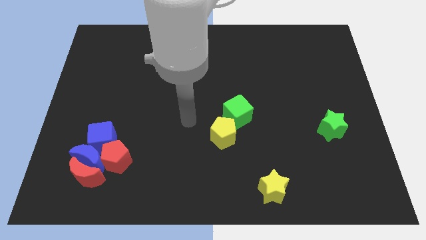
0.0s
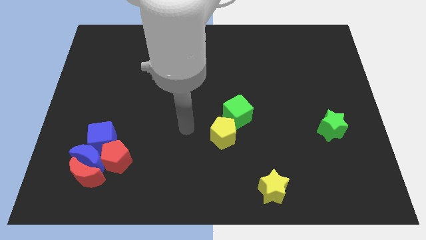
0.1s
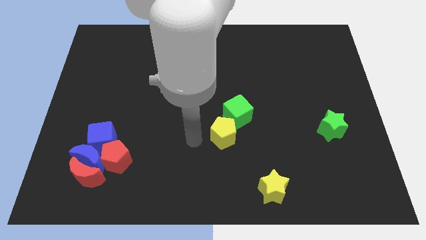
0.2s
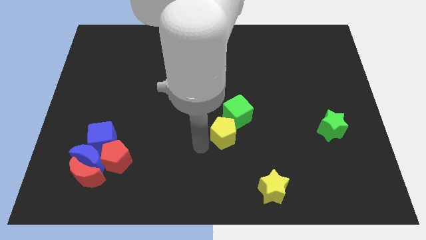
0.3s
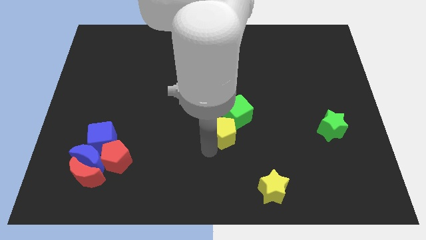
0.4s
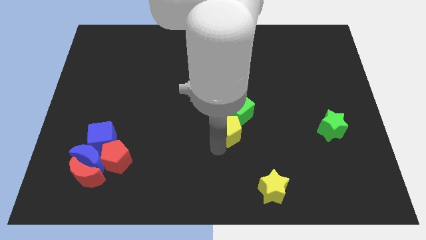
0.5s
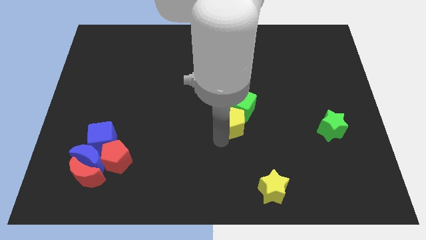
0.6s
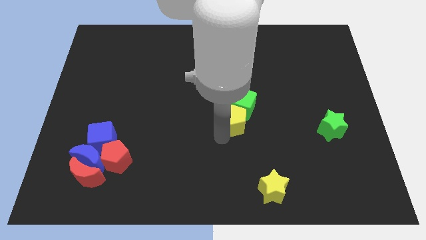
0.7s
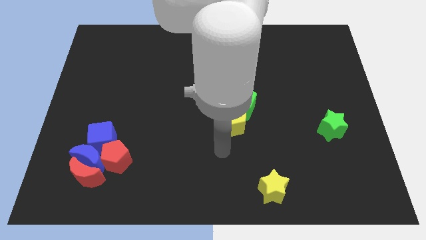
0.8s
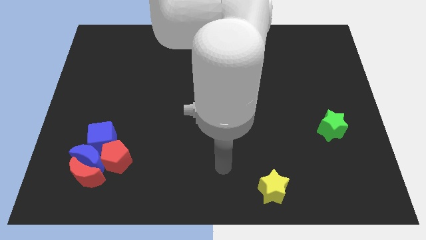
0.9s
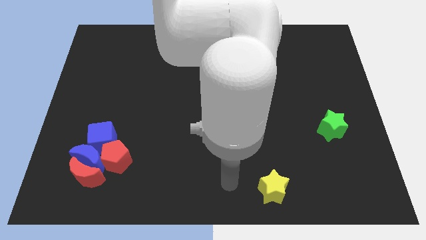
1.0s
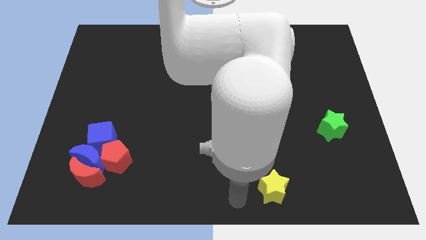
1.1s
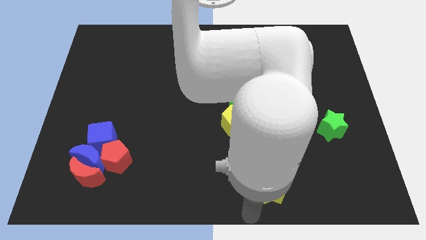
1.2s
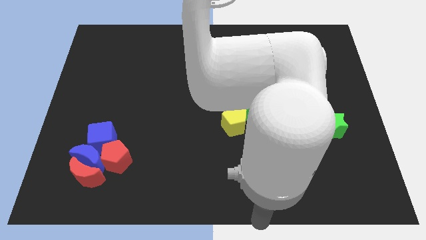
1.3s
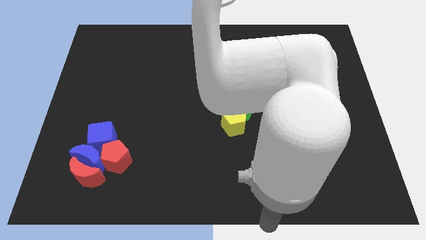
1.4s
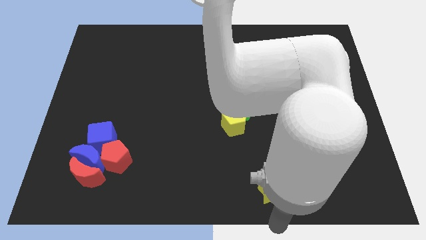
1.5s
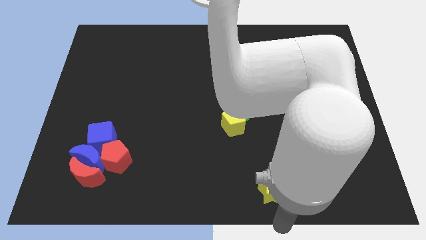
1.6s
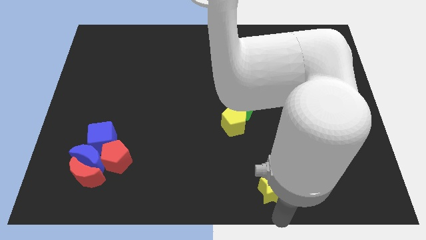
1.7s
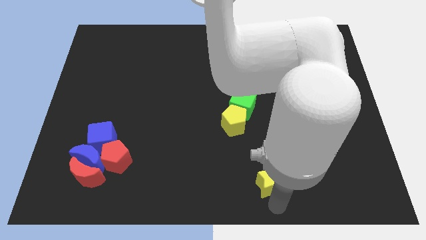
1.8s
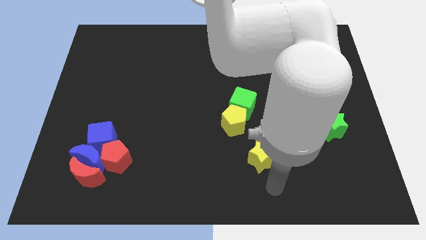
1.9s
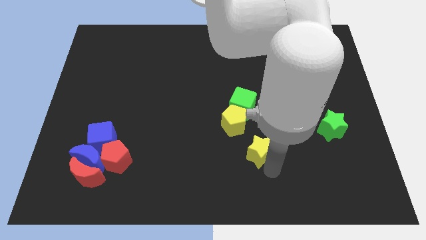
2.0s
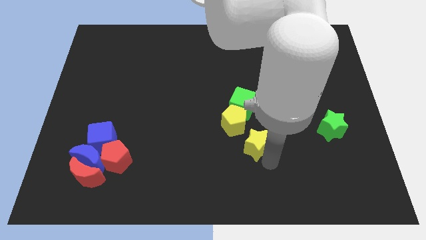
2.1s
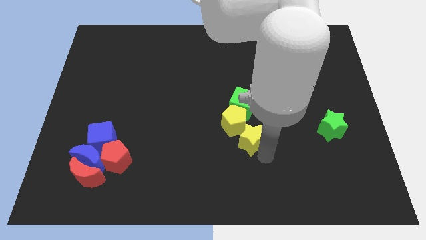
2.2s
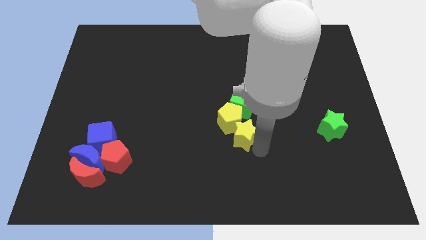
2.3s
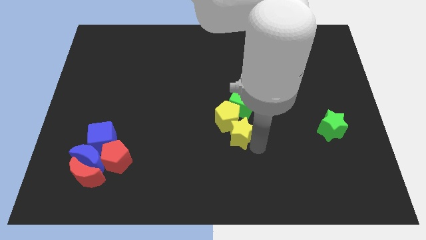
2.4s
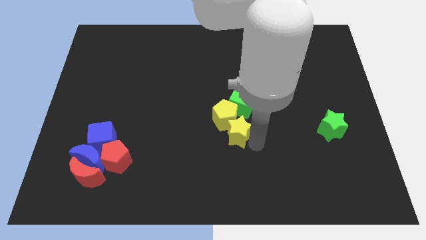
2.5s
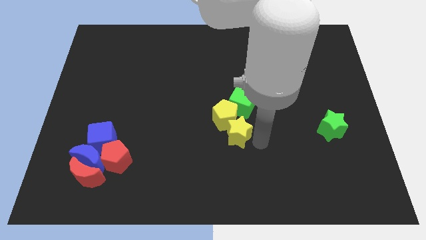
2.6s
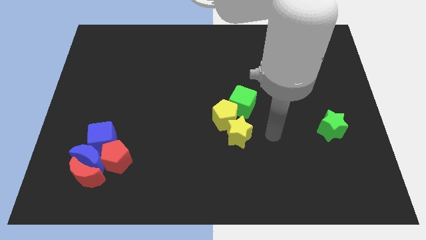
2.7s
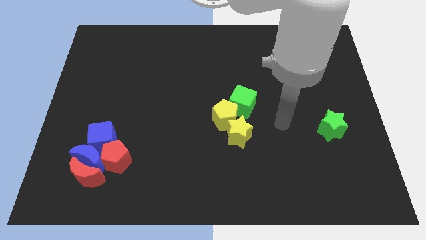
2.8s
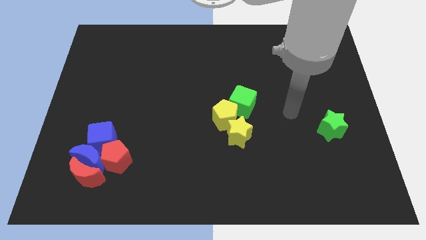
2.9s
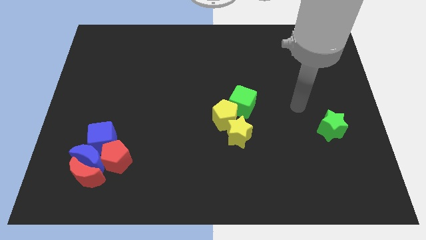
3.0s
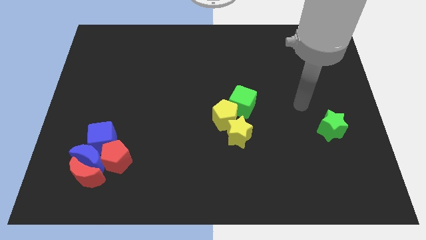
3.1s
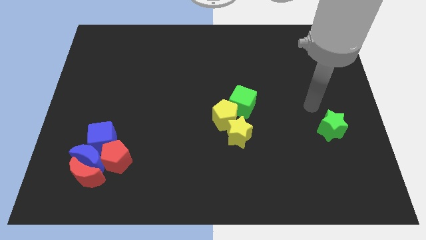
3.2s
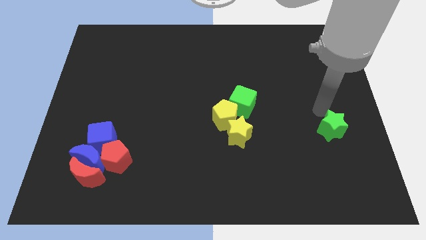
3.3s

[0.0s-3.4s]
push yellow star to the bottom right of yellow pentagon

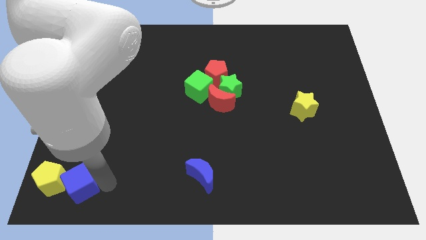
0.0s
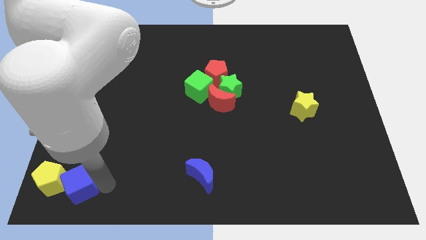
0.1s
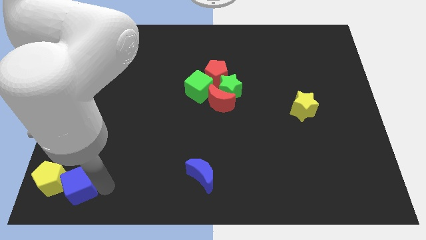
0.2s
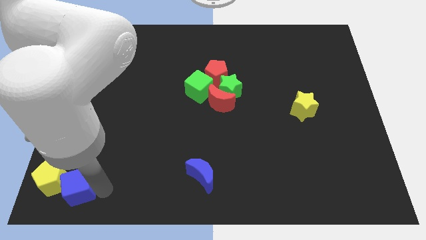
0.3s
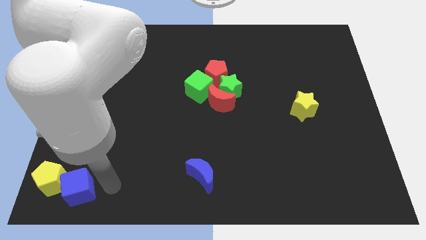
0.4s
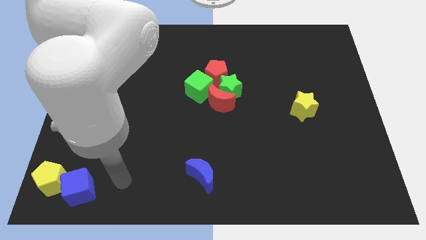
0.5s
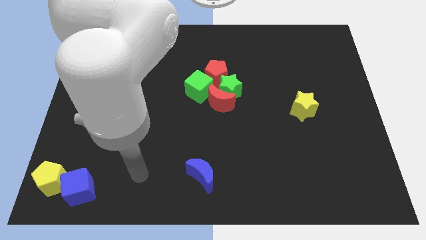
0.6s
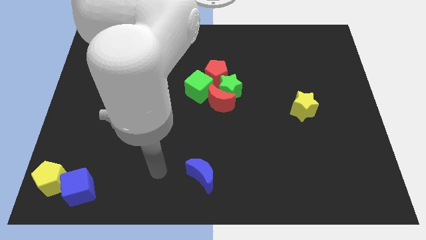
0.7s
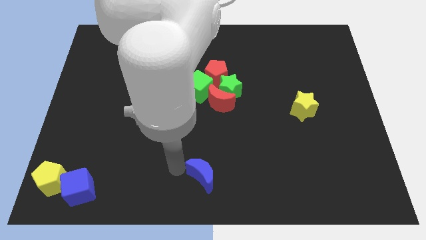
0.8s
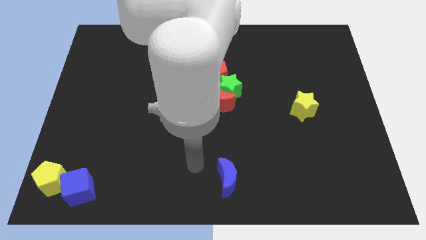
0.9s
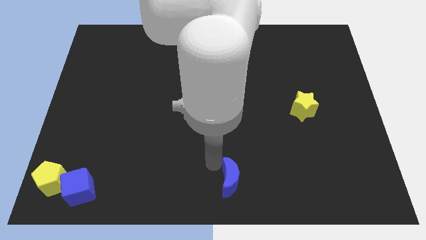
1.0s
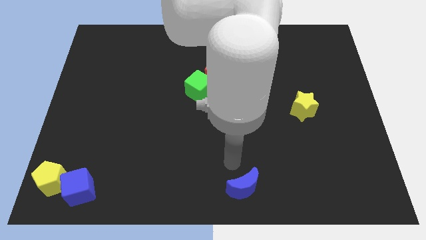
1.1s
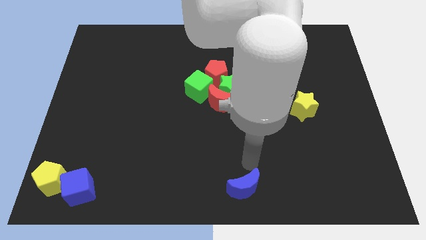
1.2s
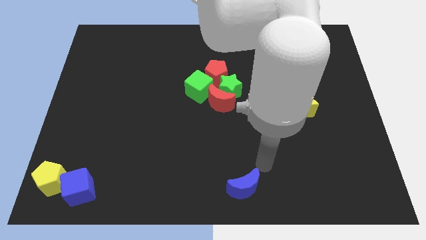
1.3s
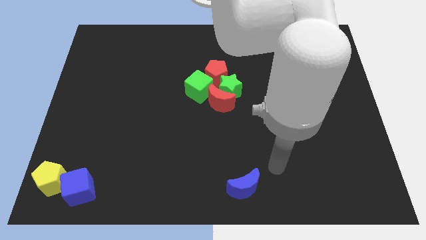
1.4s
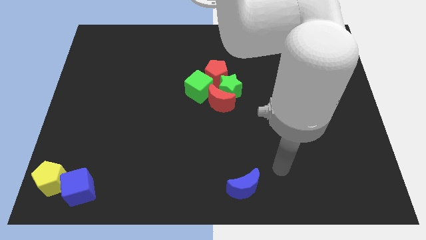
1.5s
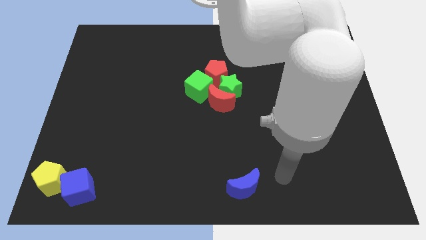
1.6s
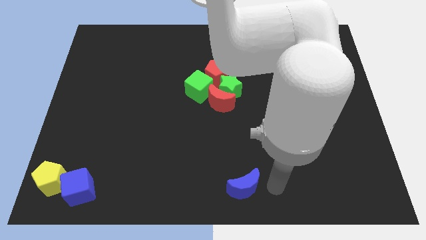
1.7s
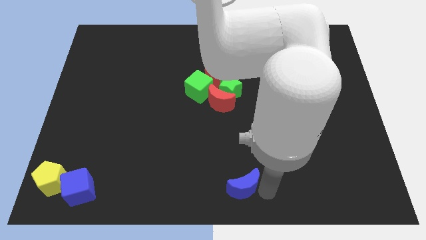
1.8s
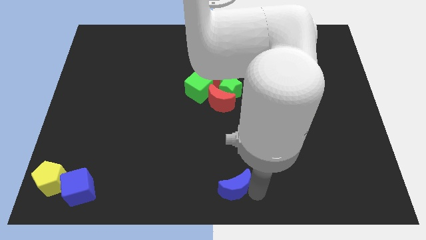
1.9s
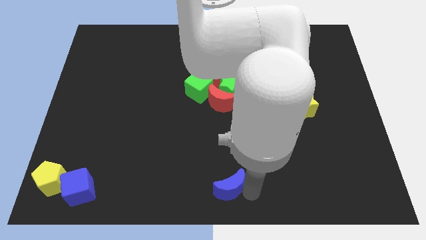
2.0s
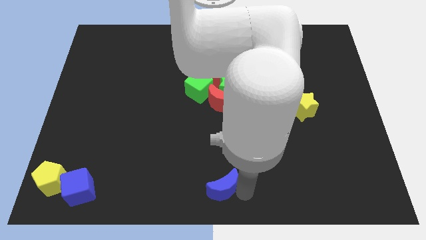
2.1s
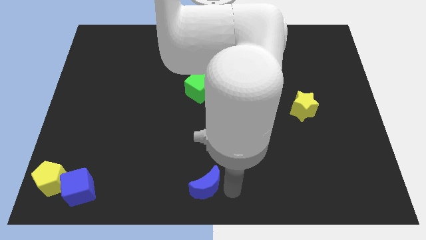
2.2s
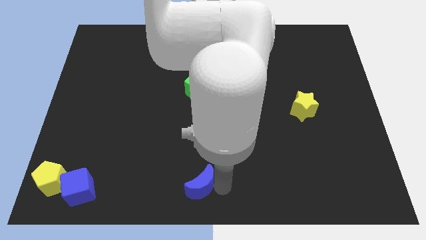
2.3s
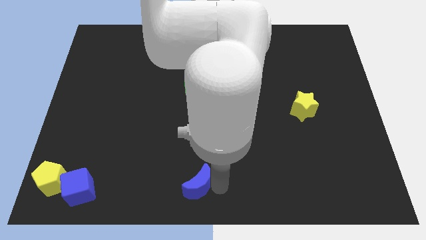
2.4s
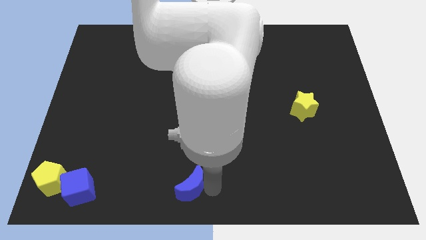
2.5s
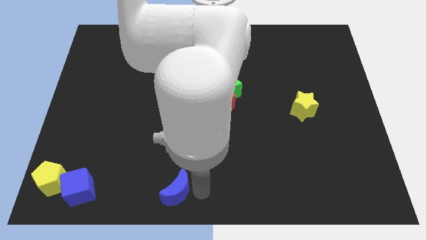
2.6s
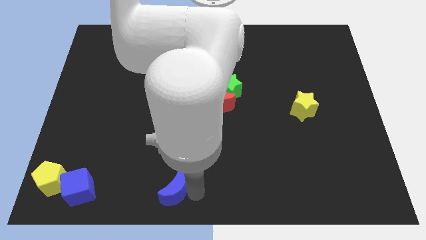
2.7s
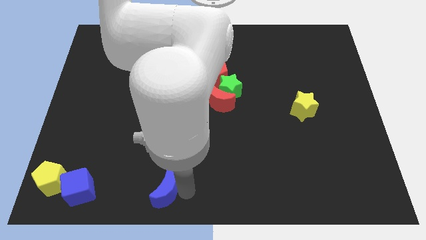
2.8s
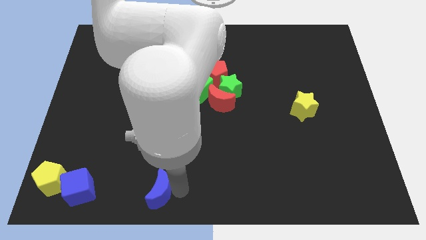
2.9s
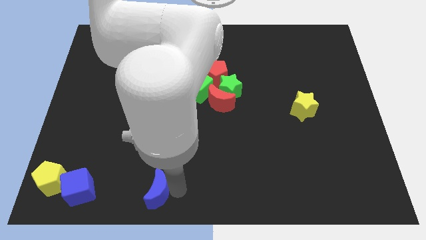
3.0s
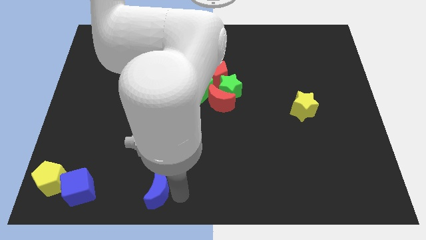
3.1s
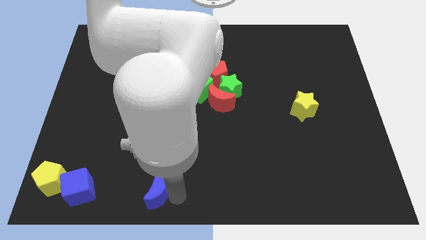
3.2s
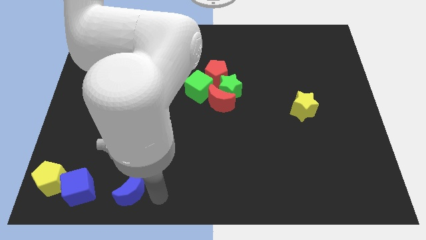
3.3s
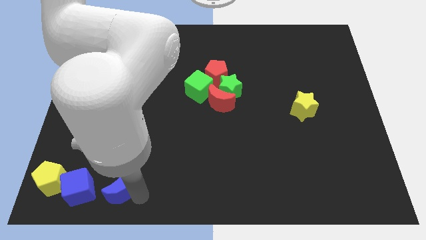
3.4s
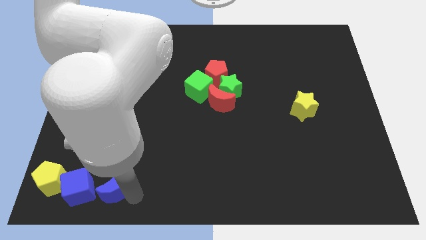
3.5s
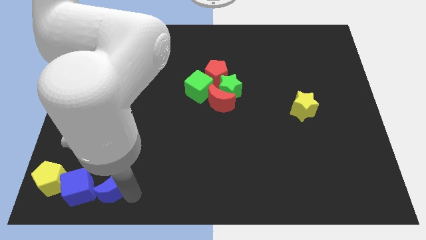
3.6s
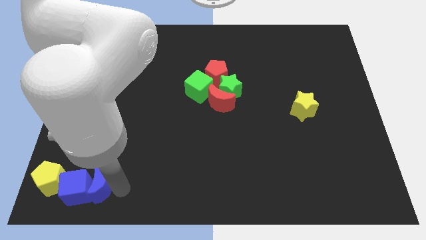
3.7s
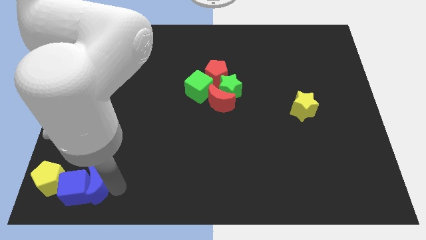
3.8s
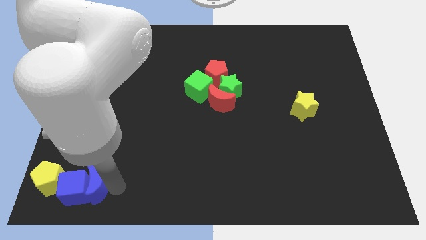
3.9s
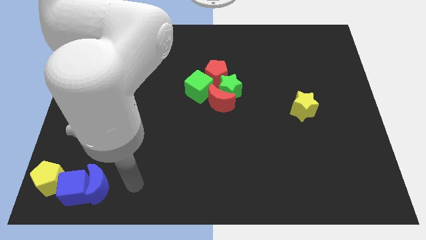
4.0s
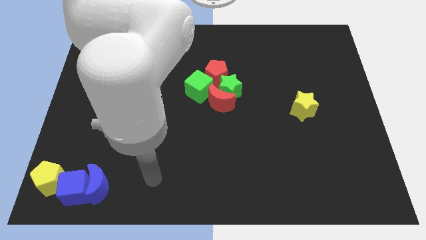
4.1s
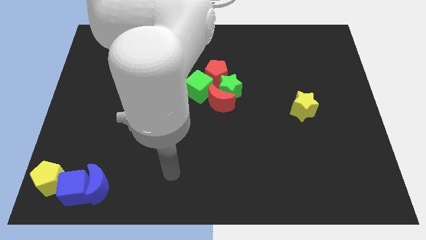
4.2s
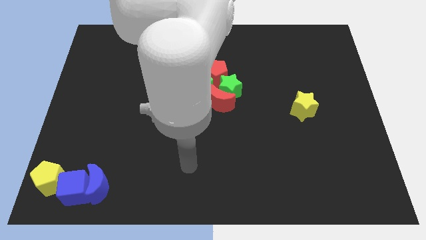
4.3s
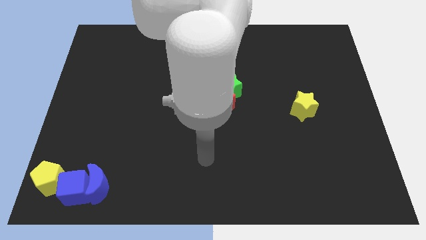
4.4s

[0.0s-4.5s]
push the blue crescent to the right of the blue cube

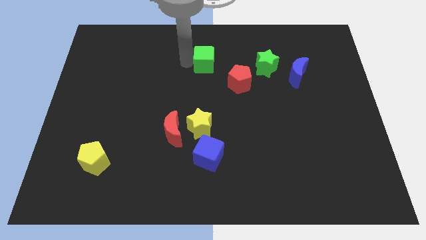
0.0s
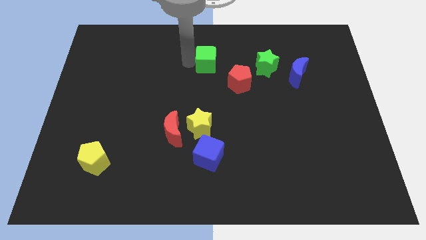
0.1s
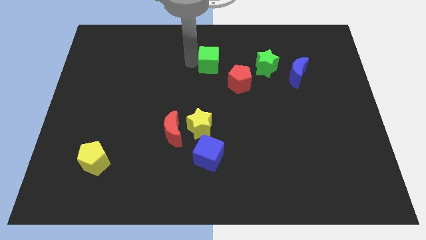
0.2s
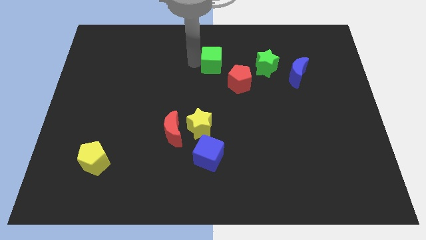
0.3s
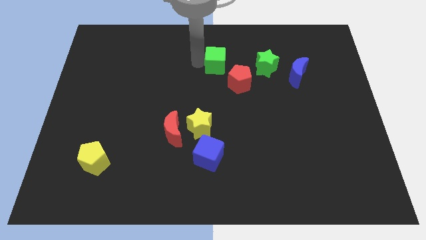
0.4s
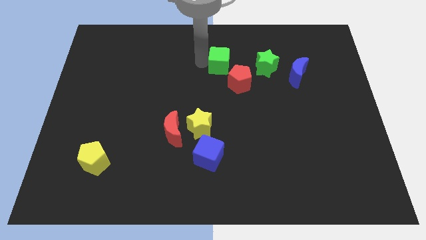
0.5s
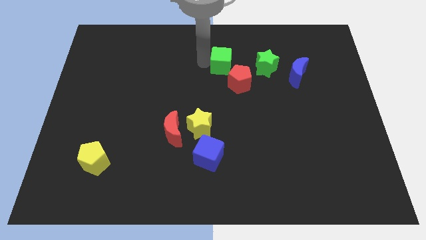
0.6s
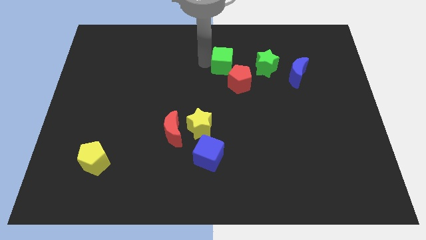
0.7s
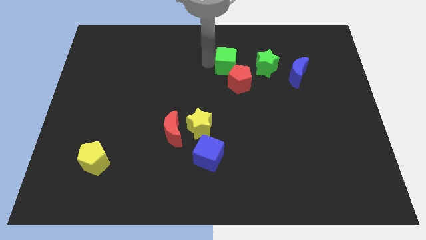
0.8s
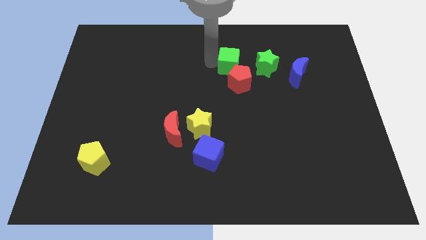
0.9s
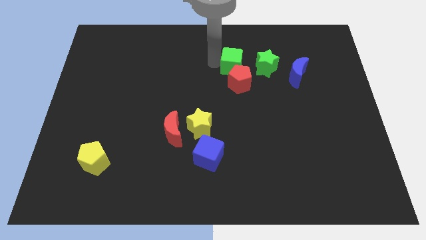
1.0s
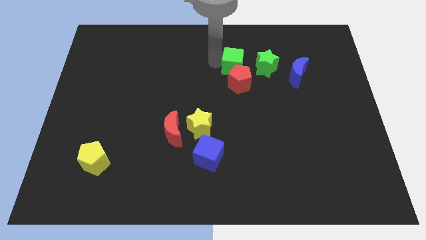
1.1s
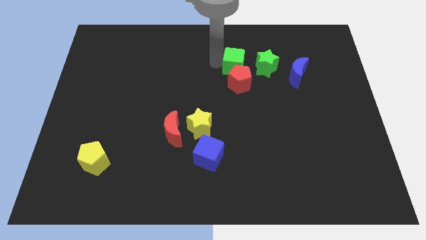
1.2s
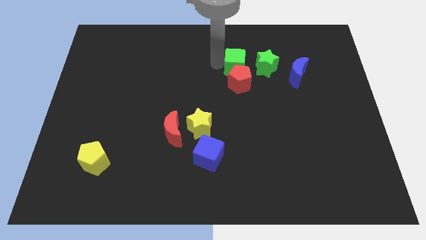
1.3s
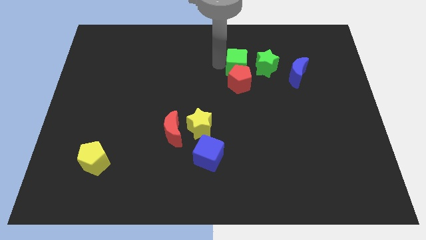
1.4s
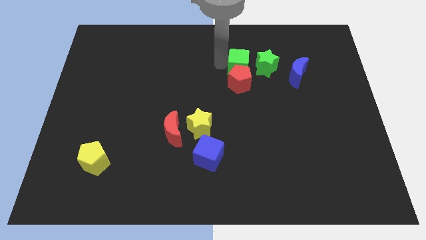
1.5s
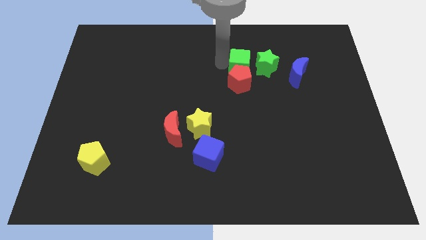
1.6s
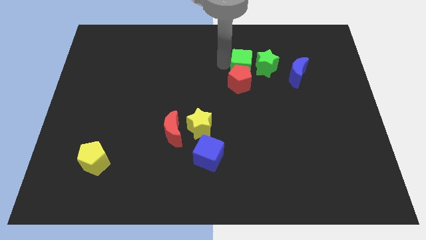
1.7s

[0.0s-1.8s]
place the green star to the top of the red pentagon
